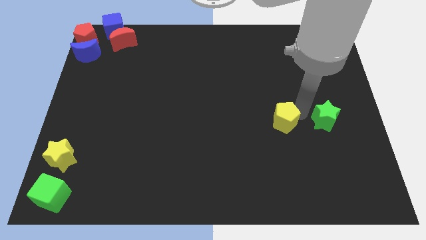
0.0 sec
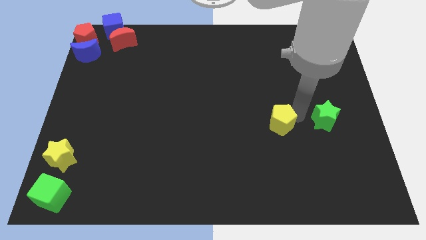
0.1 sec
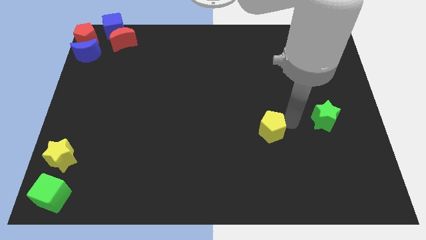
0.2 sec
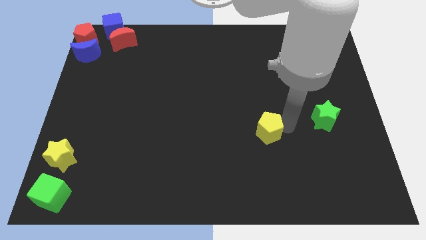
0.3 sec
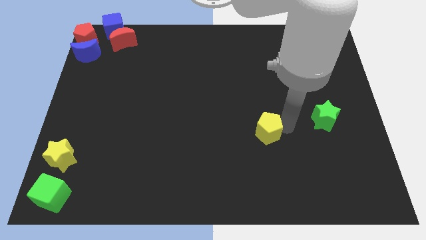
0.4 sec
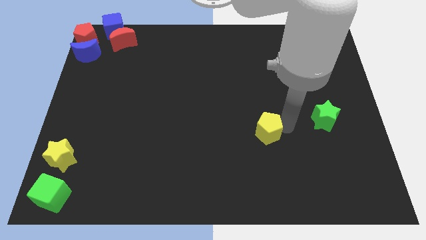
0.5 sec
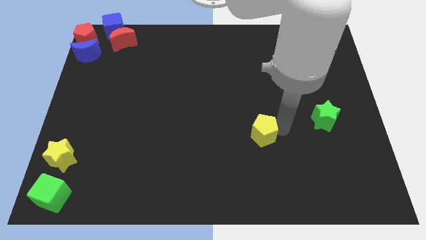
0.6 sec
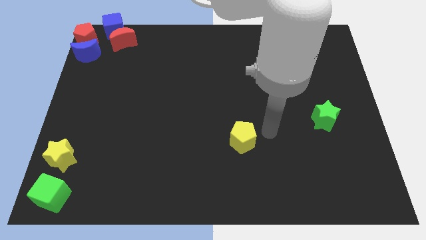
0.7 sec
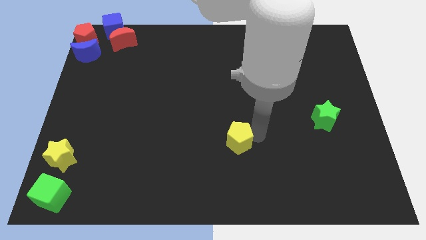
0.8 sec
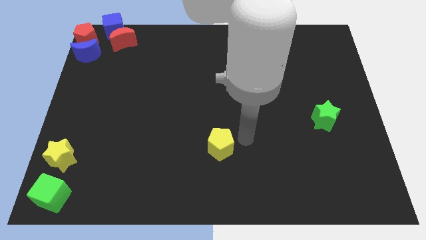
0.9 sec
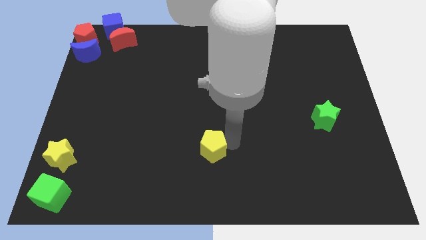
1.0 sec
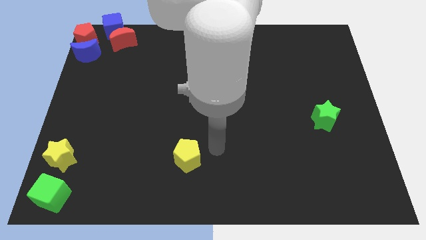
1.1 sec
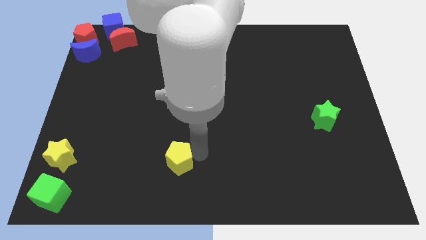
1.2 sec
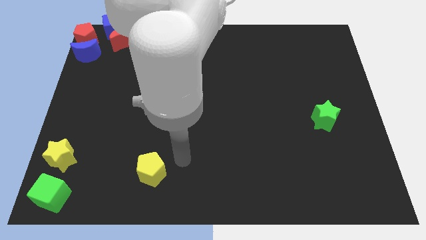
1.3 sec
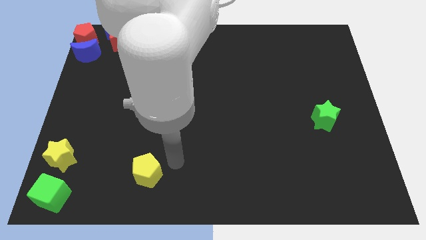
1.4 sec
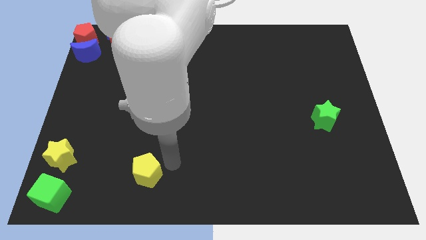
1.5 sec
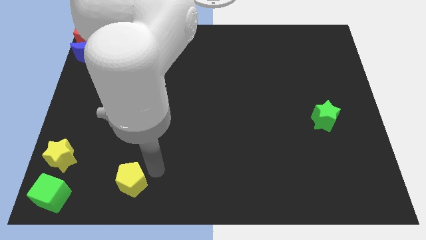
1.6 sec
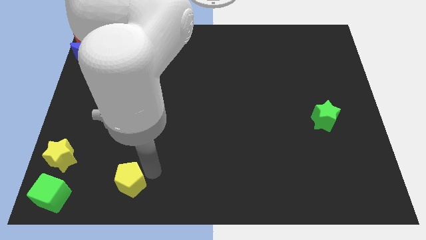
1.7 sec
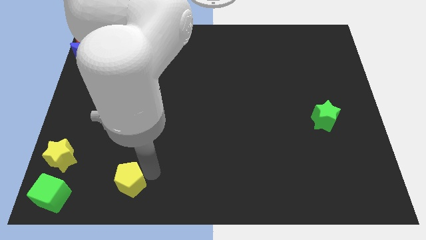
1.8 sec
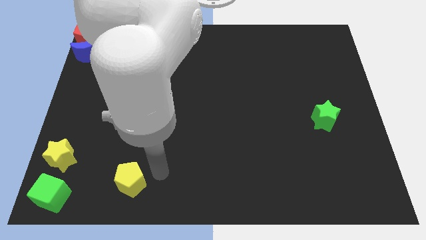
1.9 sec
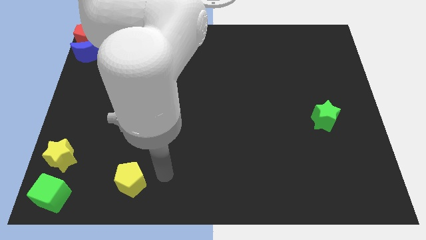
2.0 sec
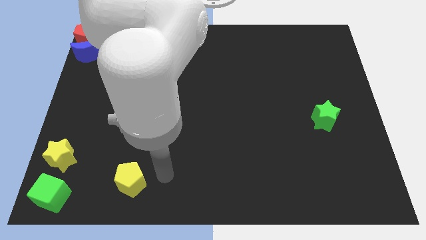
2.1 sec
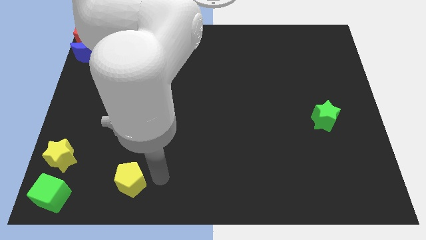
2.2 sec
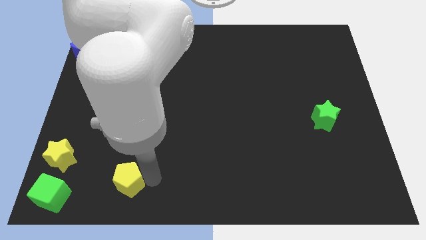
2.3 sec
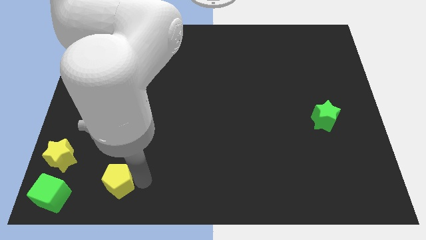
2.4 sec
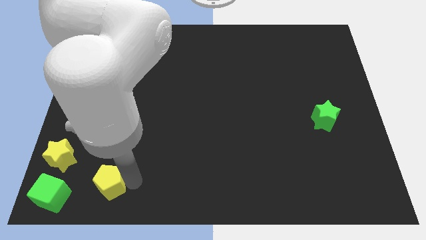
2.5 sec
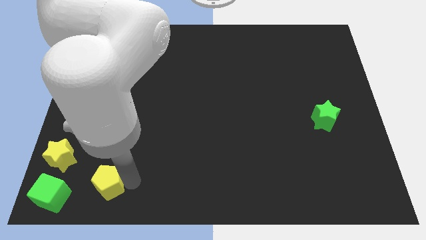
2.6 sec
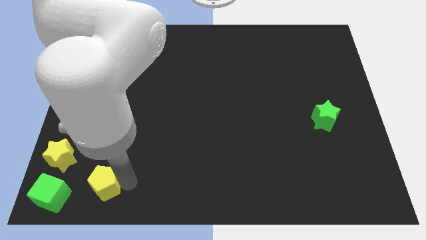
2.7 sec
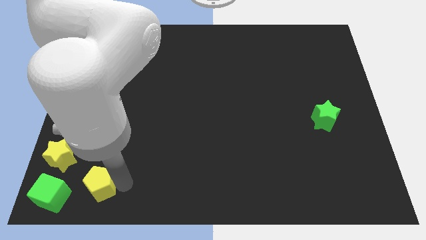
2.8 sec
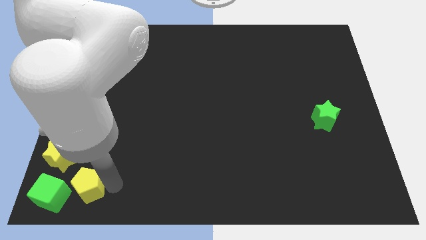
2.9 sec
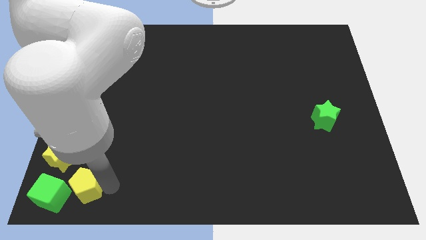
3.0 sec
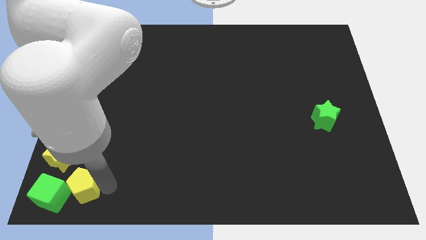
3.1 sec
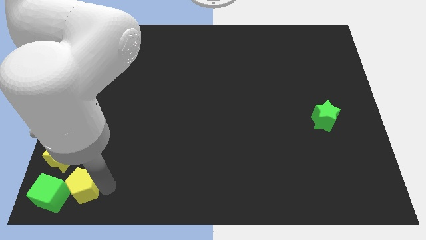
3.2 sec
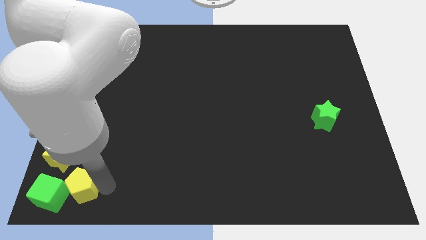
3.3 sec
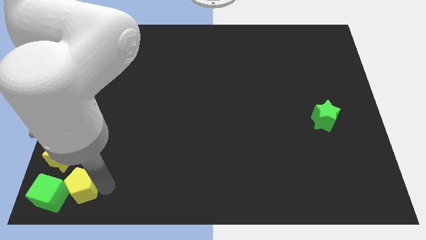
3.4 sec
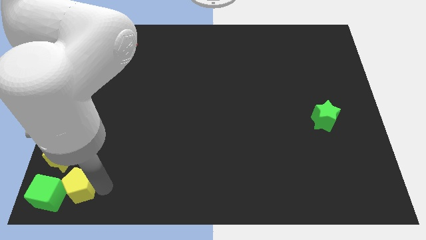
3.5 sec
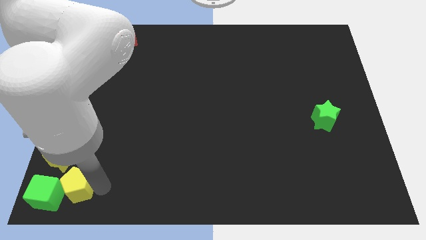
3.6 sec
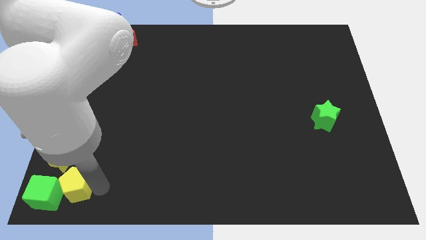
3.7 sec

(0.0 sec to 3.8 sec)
drag the yellow pentagon into the right side of the green cube

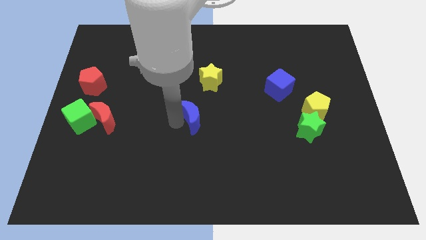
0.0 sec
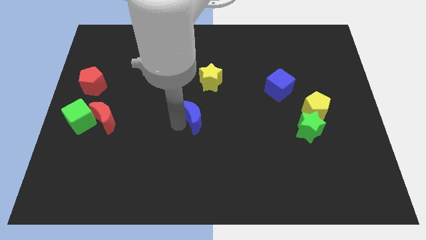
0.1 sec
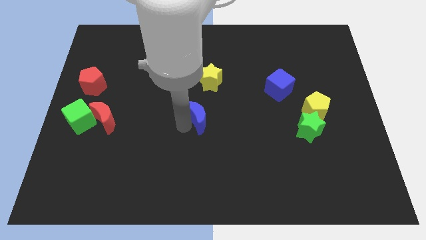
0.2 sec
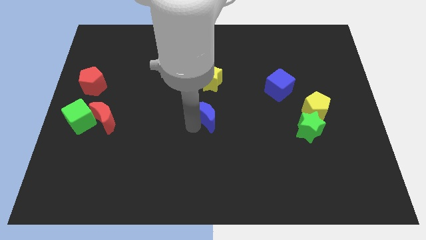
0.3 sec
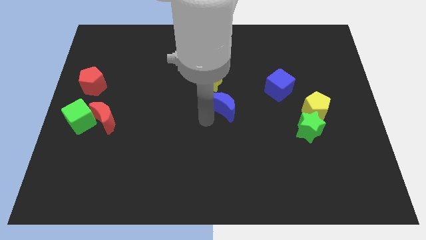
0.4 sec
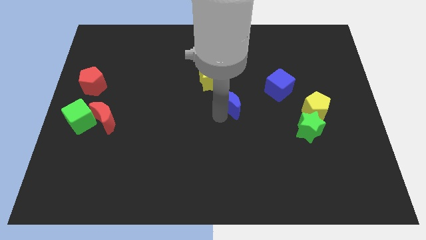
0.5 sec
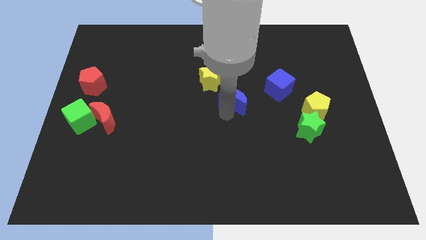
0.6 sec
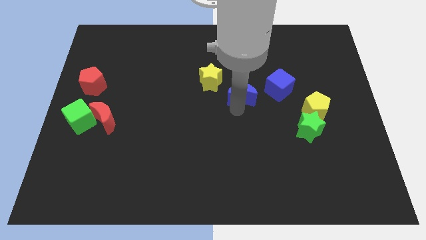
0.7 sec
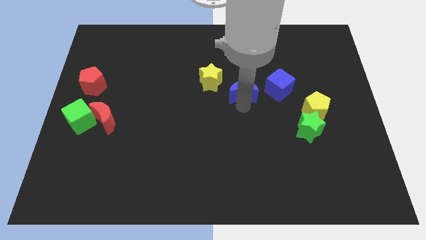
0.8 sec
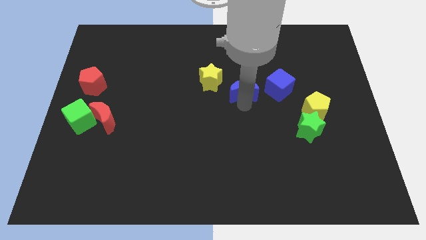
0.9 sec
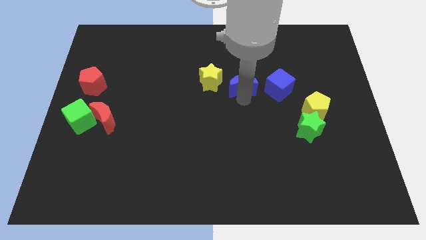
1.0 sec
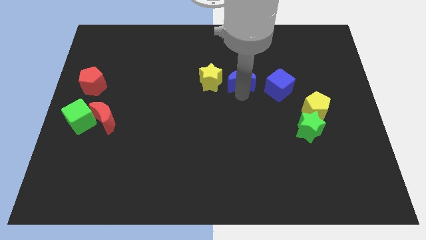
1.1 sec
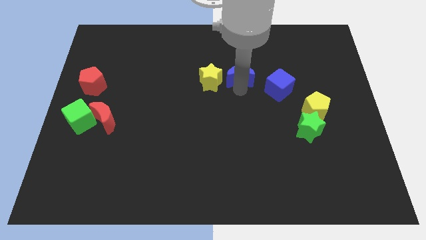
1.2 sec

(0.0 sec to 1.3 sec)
move the blue crescent to the right of the yellow star

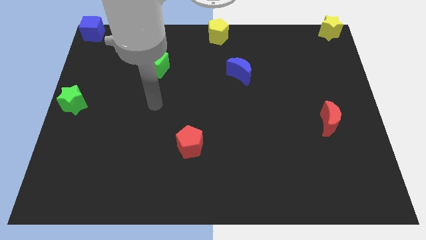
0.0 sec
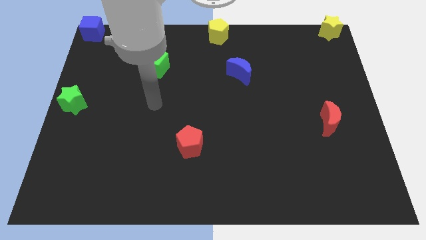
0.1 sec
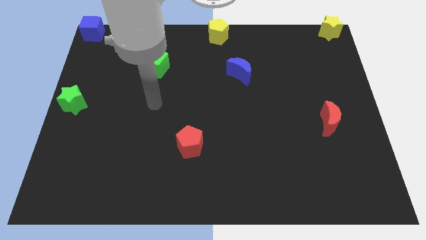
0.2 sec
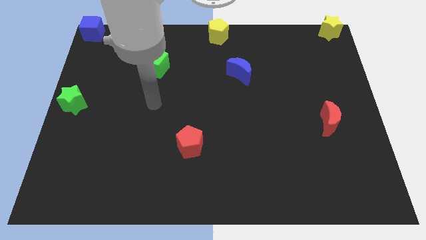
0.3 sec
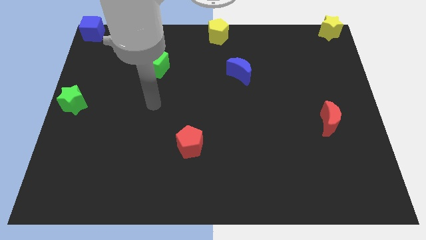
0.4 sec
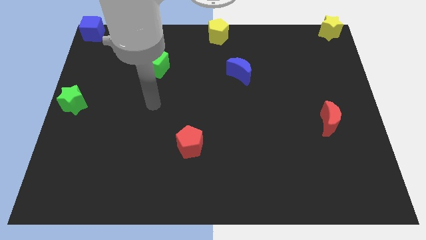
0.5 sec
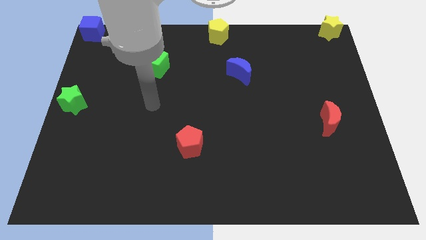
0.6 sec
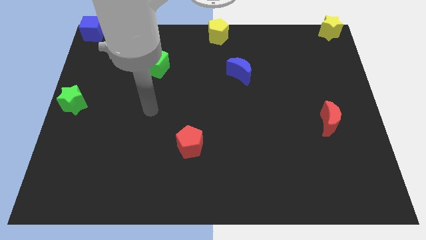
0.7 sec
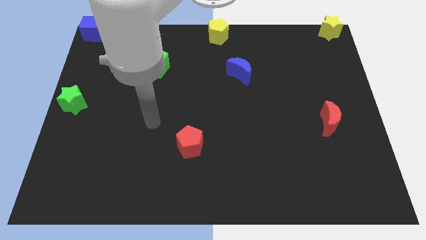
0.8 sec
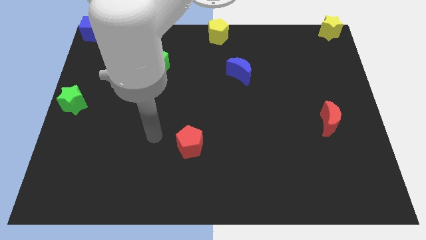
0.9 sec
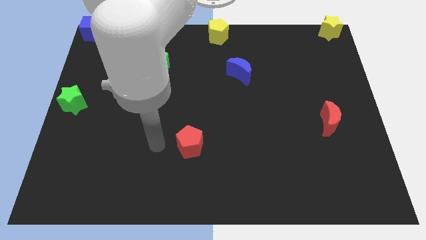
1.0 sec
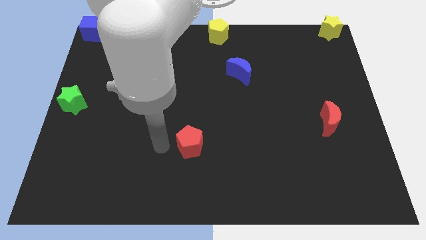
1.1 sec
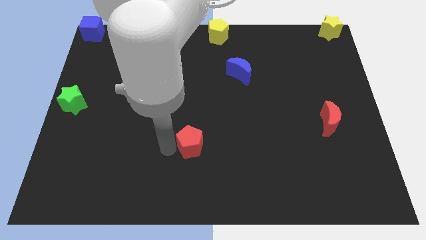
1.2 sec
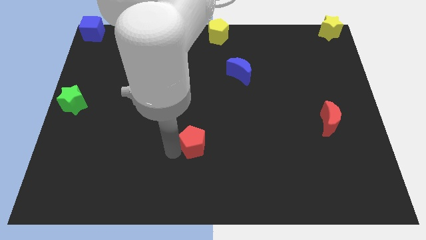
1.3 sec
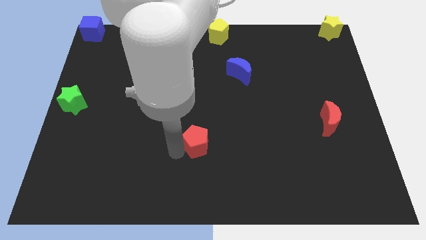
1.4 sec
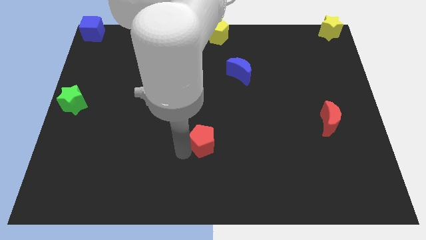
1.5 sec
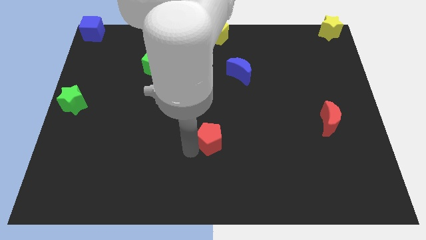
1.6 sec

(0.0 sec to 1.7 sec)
push the red pentagon towards the center of the board

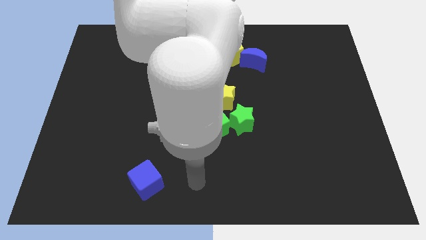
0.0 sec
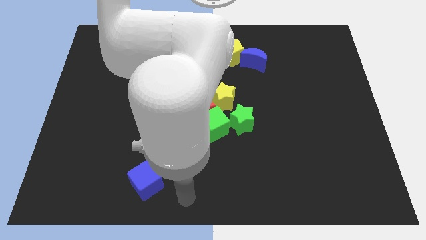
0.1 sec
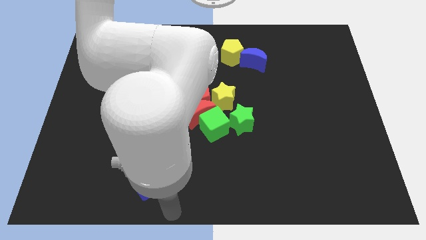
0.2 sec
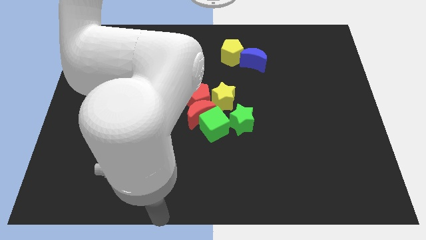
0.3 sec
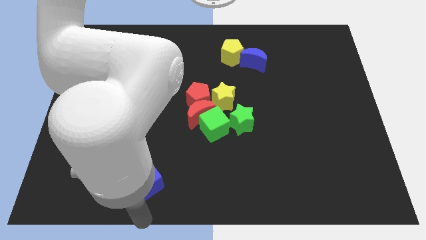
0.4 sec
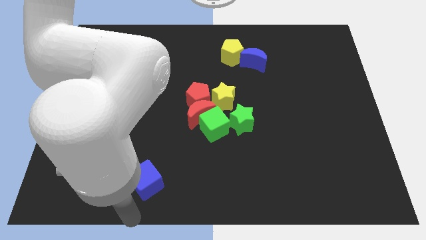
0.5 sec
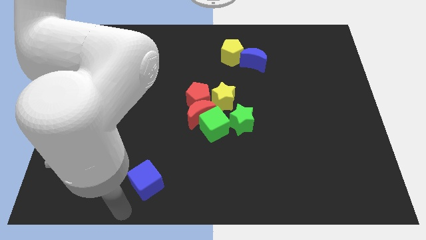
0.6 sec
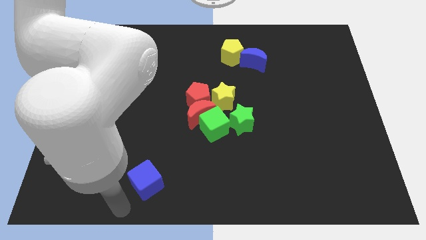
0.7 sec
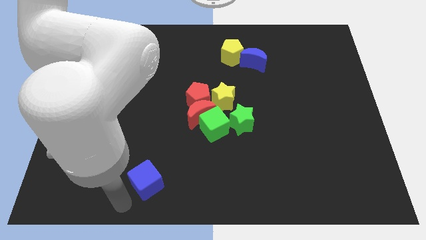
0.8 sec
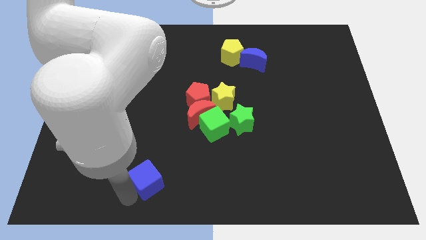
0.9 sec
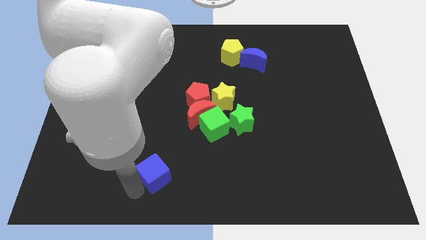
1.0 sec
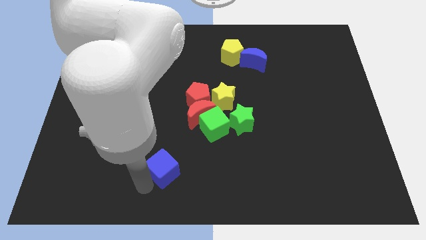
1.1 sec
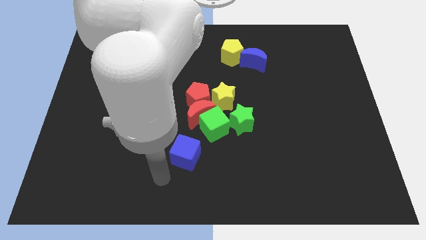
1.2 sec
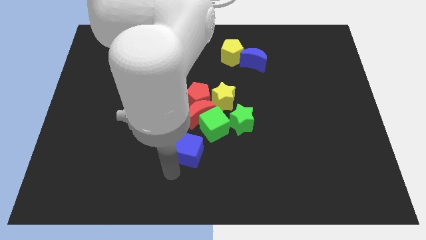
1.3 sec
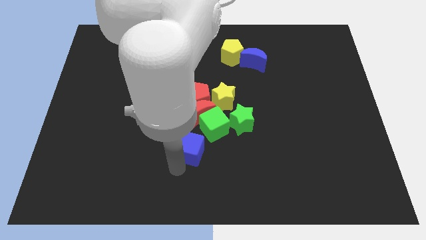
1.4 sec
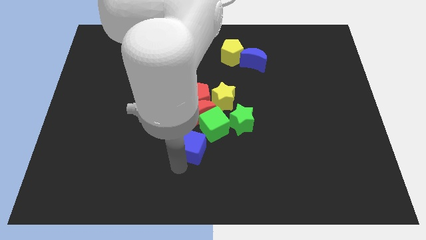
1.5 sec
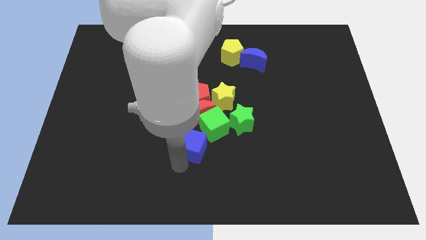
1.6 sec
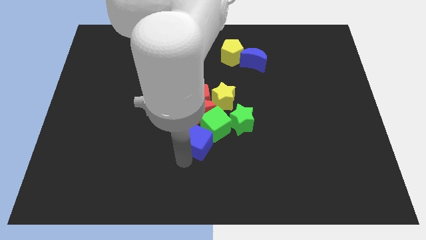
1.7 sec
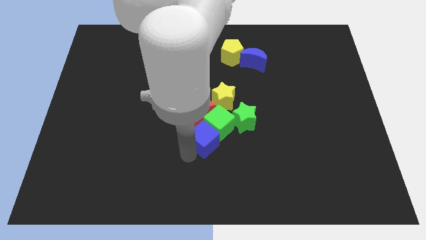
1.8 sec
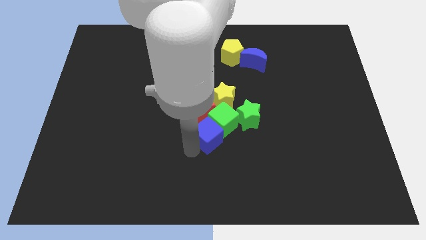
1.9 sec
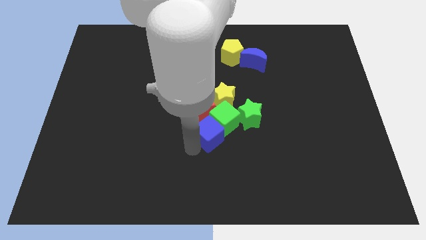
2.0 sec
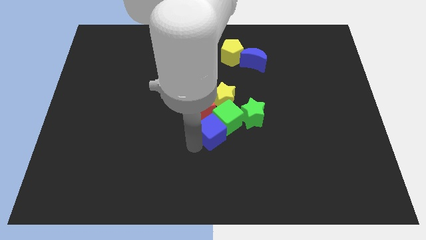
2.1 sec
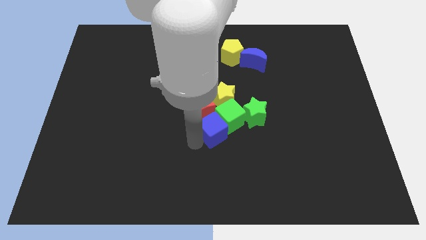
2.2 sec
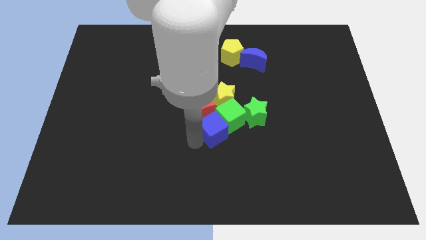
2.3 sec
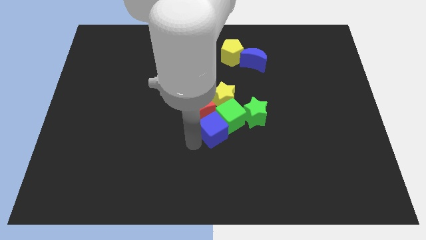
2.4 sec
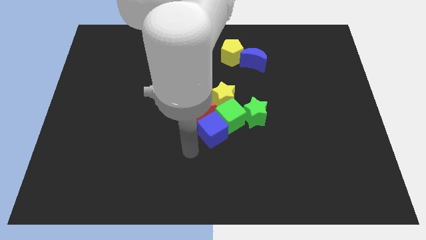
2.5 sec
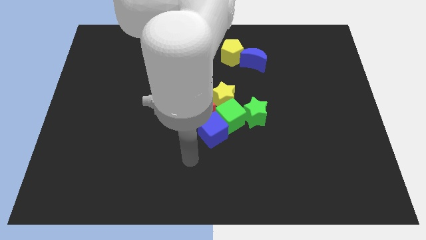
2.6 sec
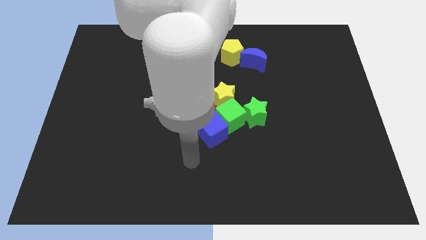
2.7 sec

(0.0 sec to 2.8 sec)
move the blue cube into the green cube diagonally
